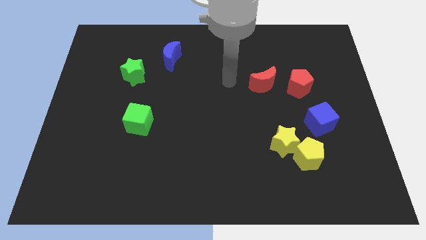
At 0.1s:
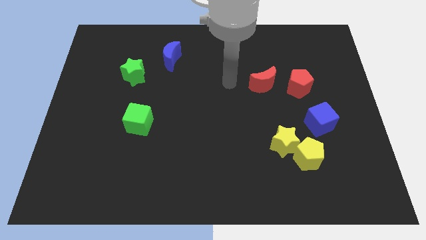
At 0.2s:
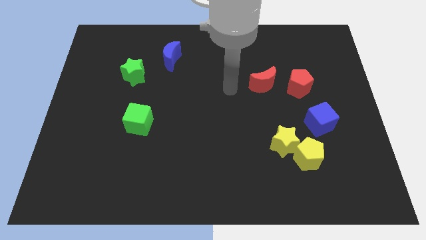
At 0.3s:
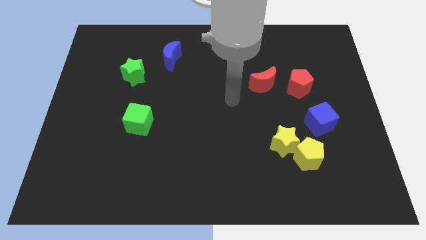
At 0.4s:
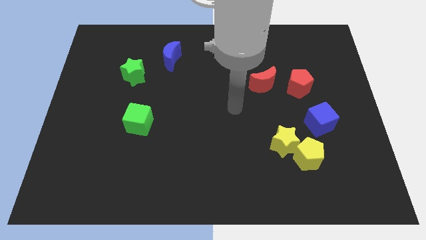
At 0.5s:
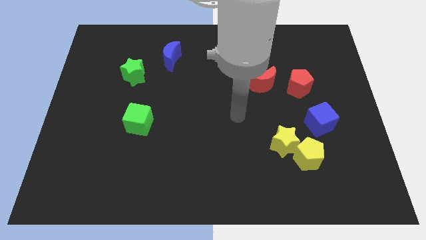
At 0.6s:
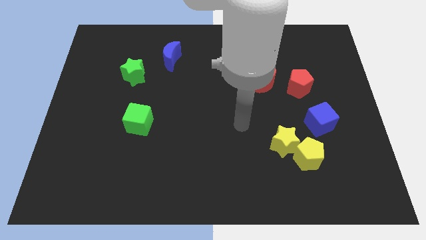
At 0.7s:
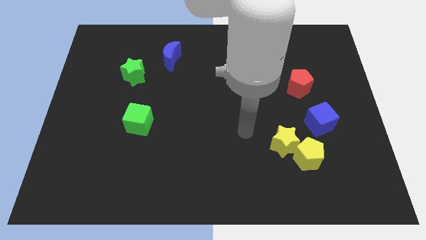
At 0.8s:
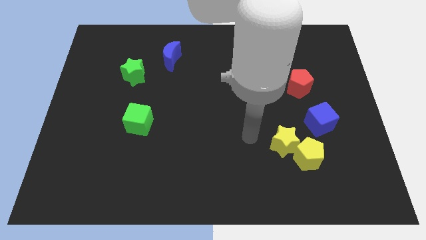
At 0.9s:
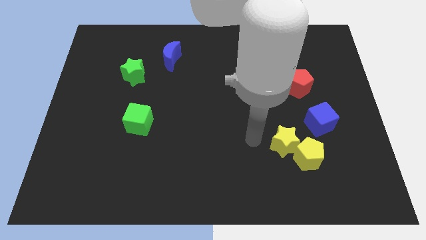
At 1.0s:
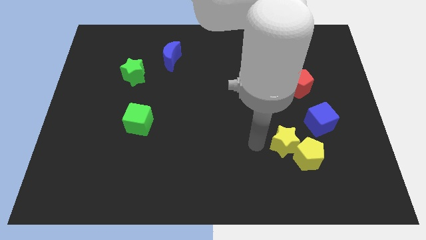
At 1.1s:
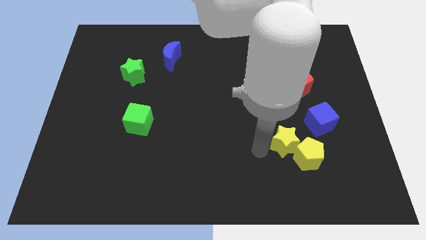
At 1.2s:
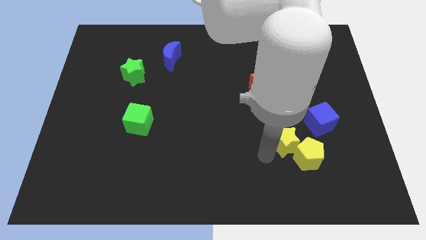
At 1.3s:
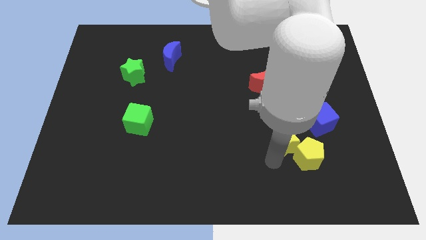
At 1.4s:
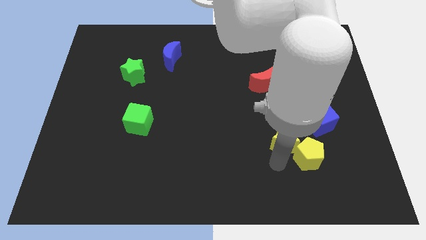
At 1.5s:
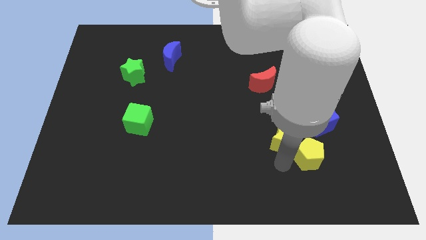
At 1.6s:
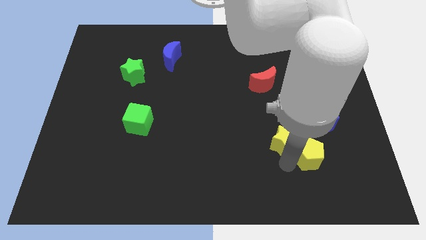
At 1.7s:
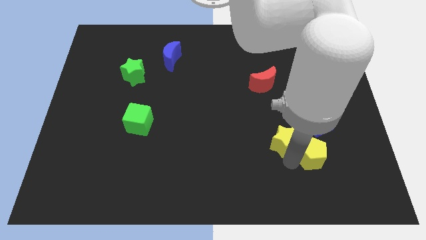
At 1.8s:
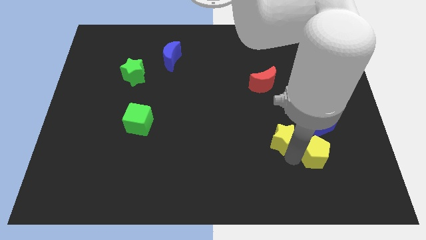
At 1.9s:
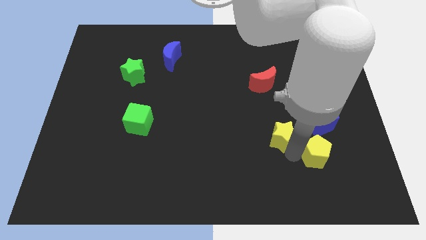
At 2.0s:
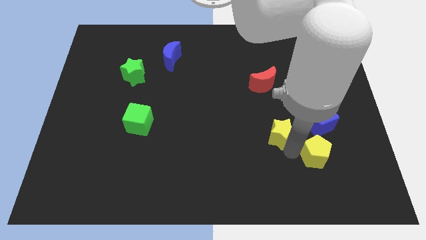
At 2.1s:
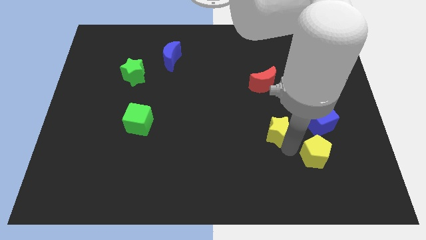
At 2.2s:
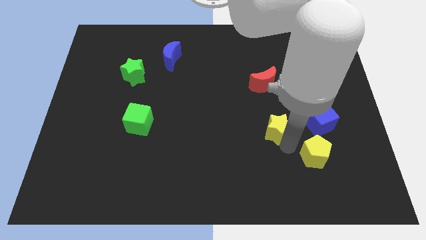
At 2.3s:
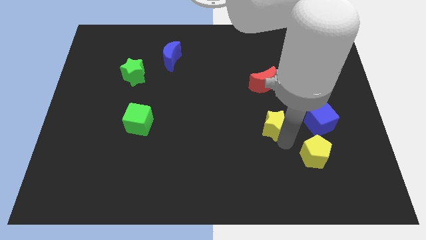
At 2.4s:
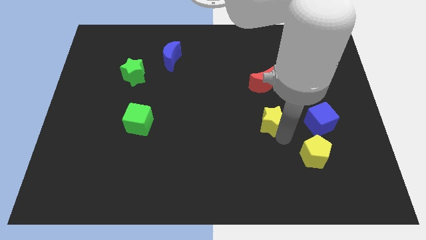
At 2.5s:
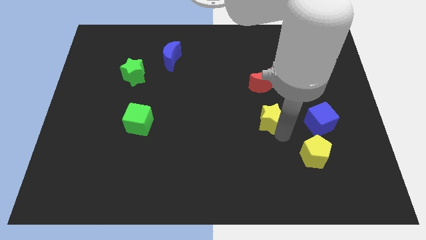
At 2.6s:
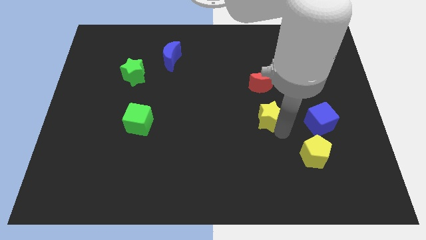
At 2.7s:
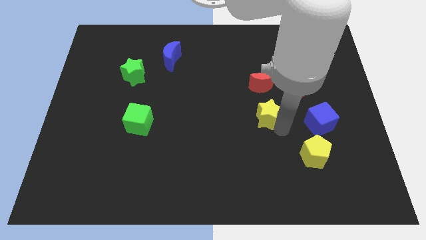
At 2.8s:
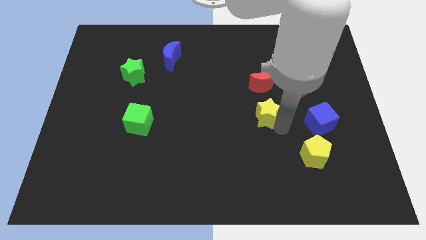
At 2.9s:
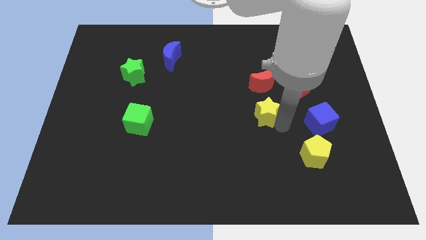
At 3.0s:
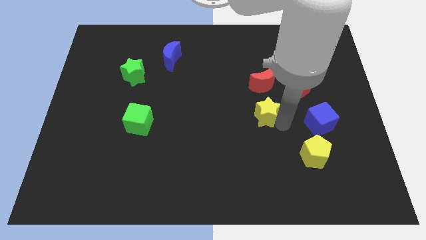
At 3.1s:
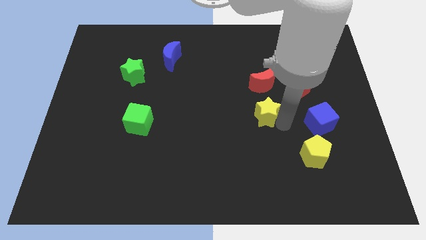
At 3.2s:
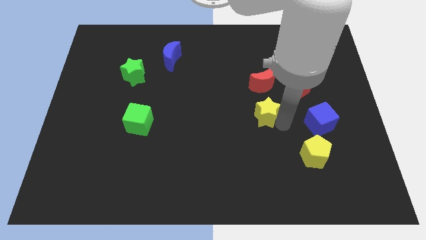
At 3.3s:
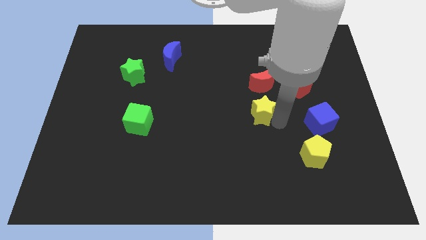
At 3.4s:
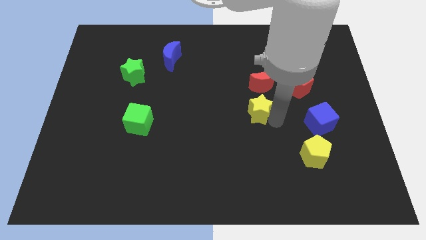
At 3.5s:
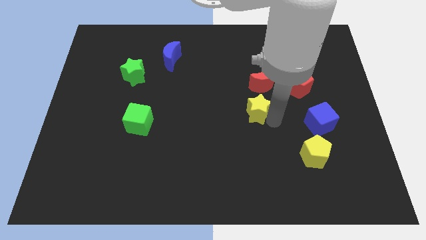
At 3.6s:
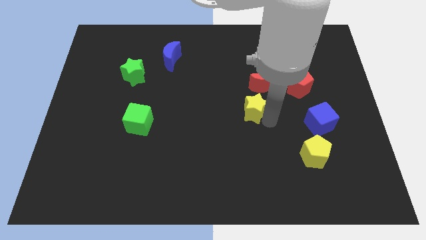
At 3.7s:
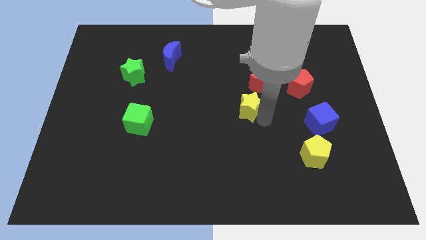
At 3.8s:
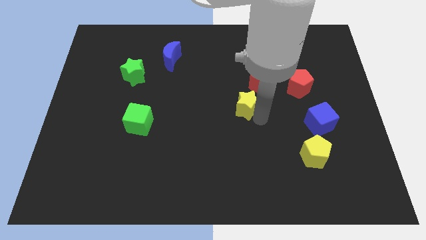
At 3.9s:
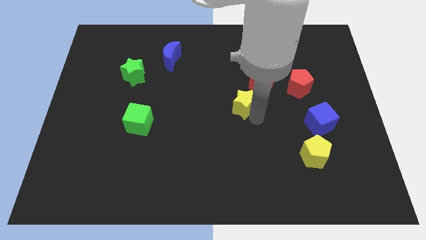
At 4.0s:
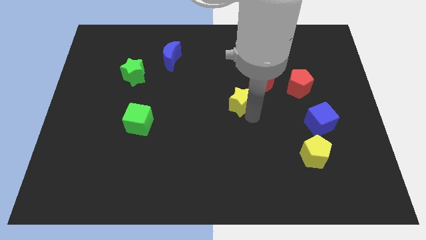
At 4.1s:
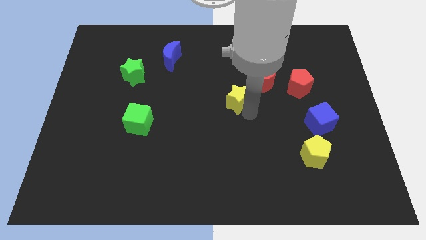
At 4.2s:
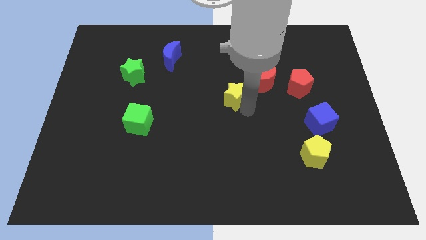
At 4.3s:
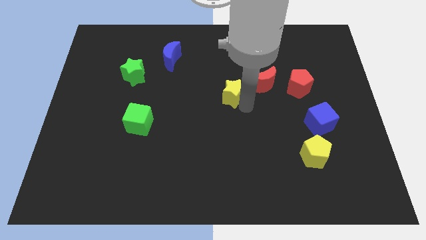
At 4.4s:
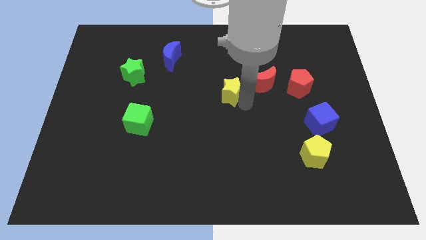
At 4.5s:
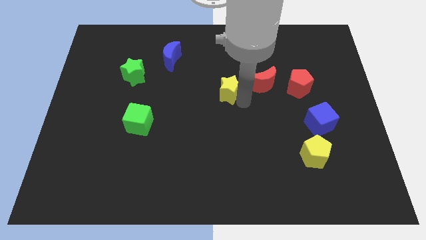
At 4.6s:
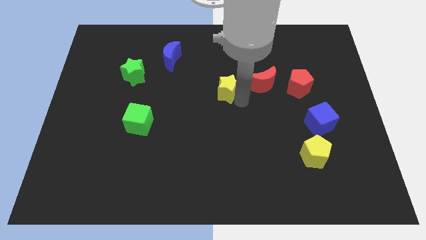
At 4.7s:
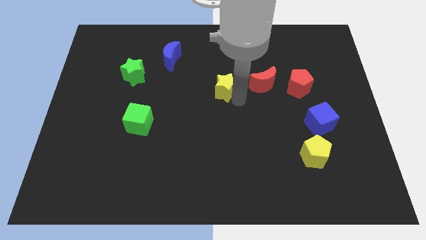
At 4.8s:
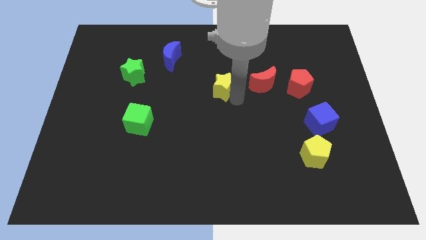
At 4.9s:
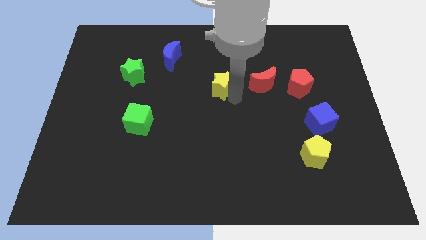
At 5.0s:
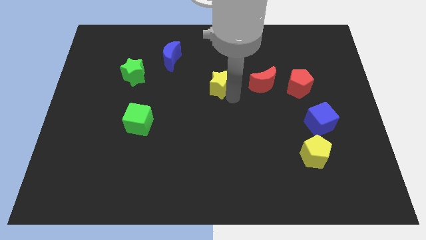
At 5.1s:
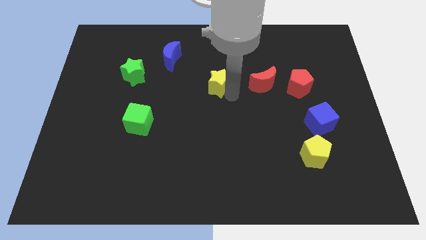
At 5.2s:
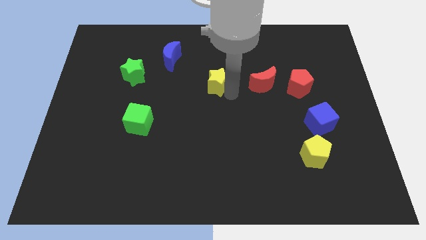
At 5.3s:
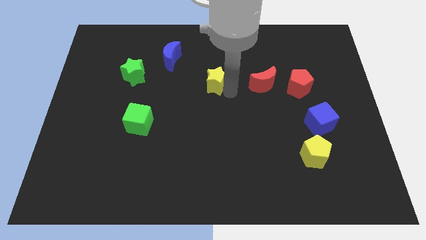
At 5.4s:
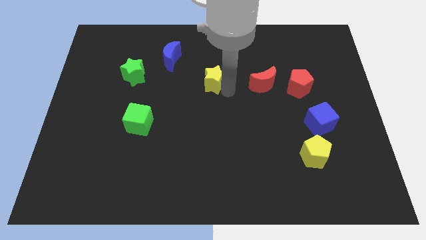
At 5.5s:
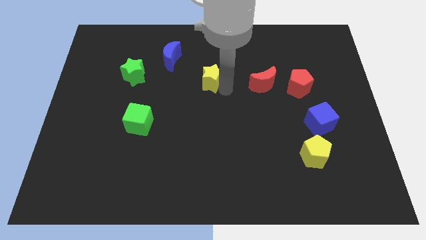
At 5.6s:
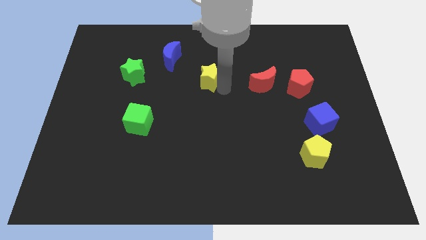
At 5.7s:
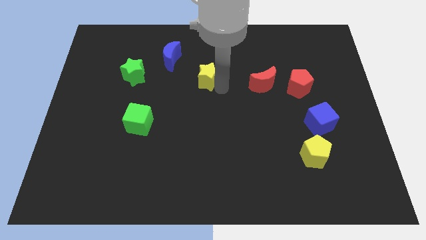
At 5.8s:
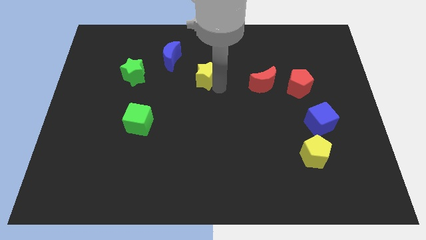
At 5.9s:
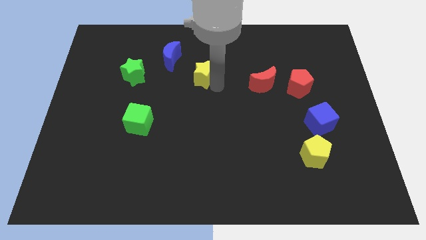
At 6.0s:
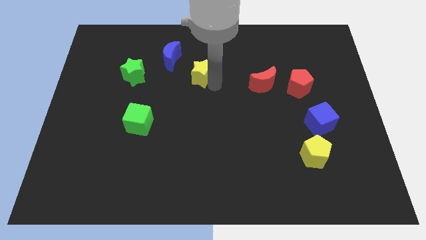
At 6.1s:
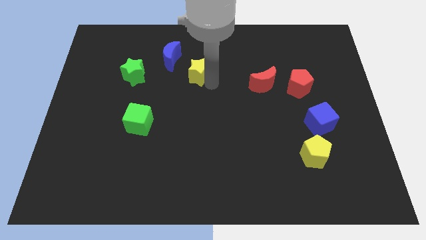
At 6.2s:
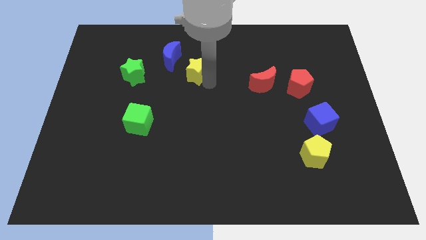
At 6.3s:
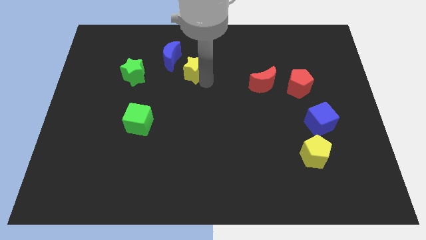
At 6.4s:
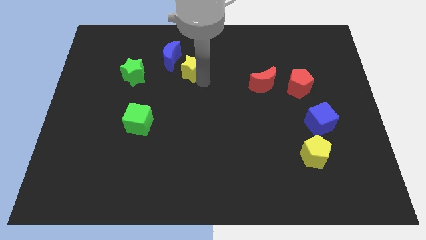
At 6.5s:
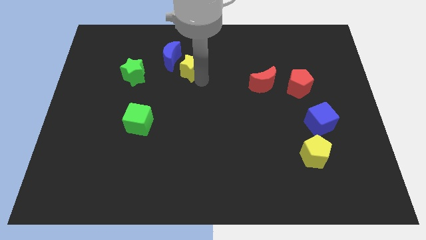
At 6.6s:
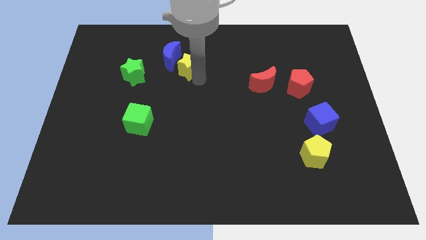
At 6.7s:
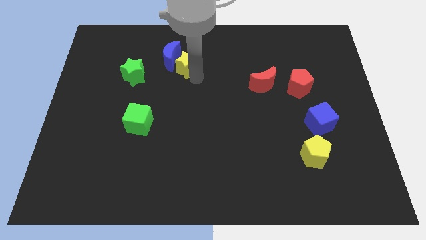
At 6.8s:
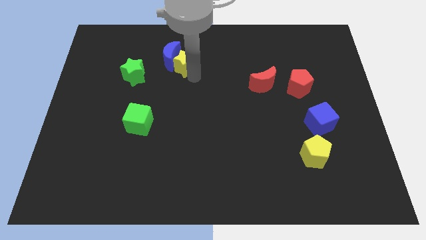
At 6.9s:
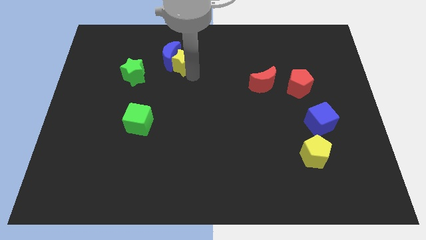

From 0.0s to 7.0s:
move the yellow star towards the blue moon

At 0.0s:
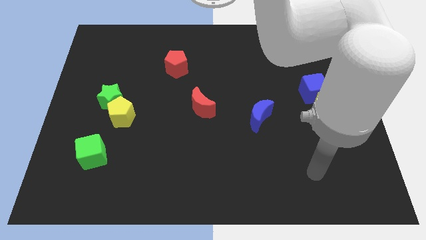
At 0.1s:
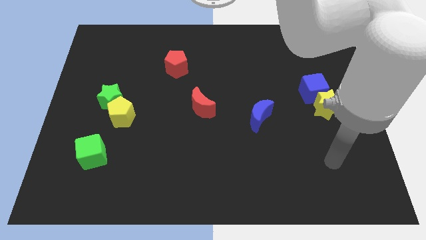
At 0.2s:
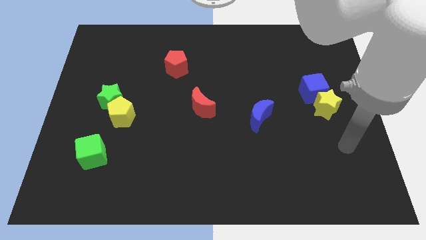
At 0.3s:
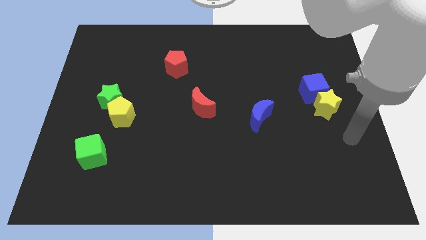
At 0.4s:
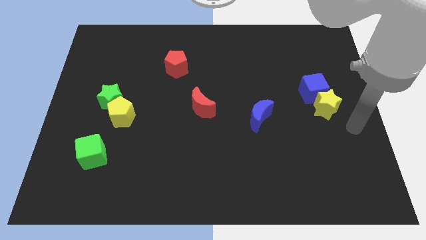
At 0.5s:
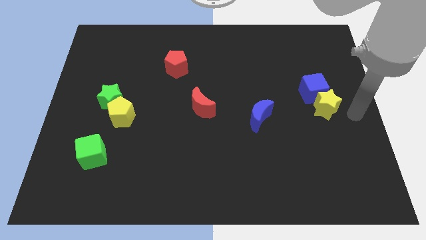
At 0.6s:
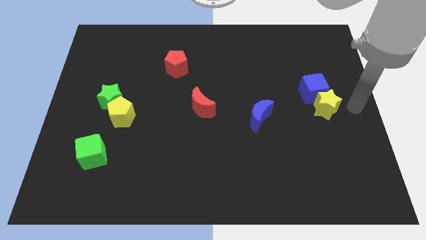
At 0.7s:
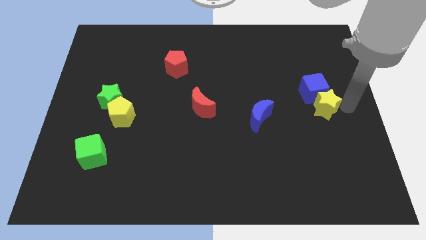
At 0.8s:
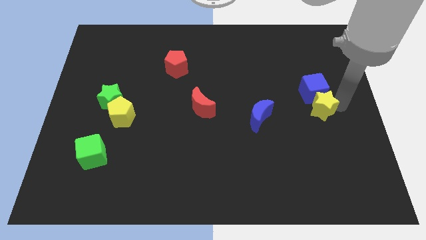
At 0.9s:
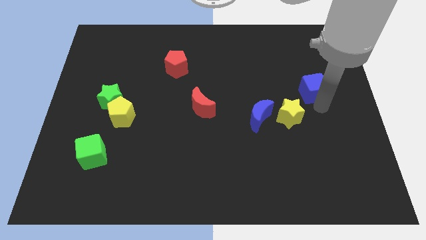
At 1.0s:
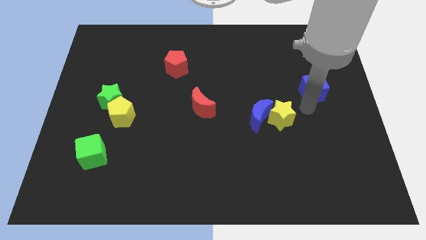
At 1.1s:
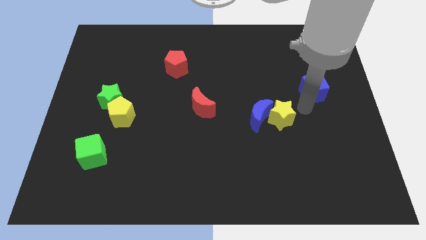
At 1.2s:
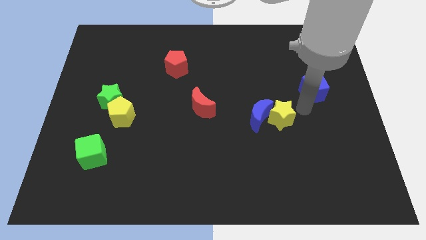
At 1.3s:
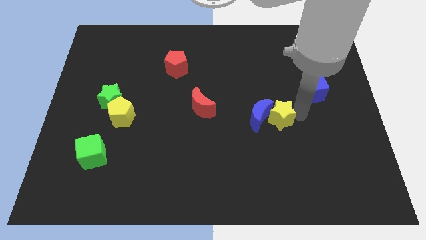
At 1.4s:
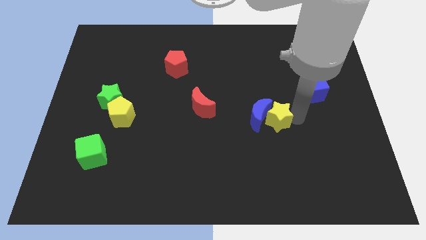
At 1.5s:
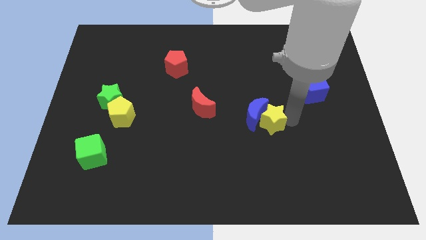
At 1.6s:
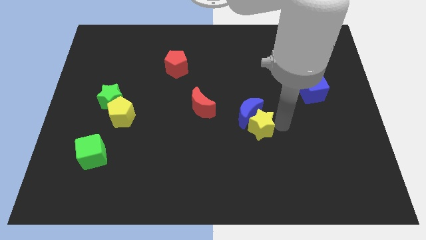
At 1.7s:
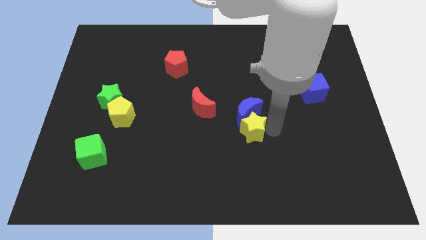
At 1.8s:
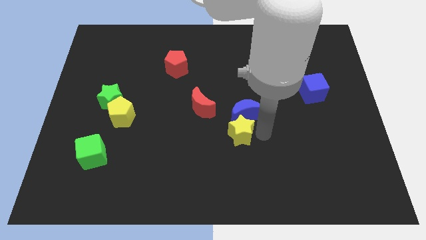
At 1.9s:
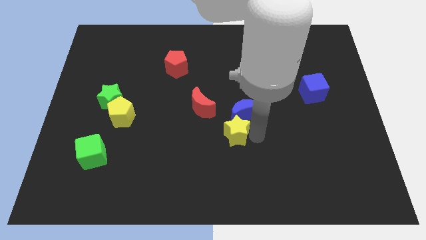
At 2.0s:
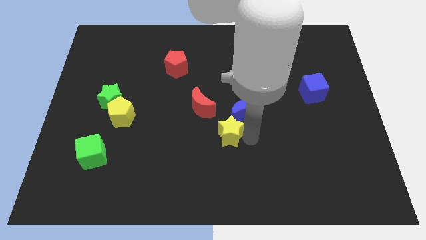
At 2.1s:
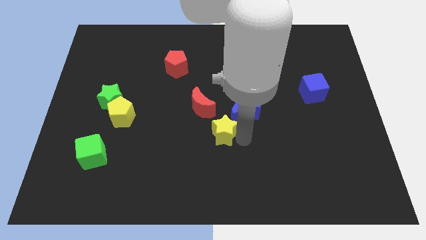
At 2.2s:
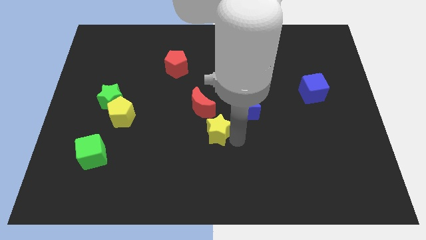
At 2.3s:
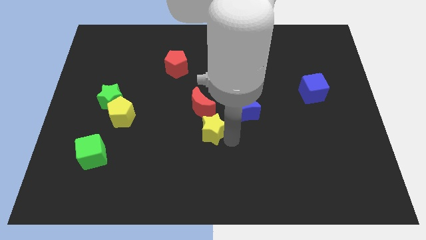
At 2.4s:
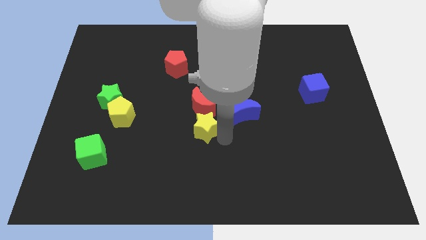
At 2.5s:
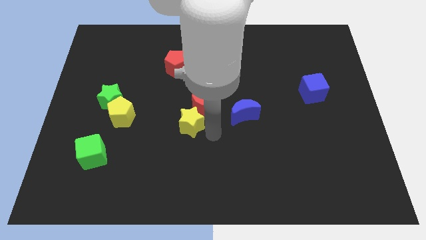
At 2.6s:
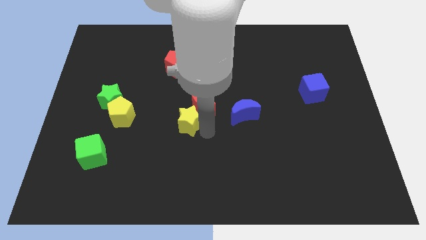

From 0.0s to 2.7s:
push the yellow star to the red moon
